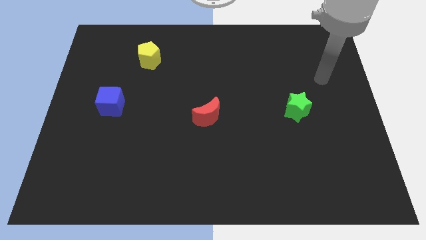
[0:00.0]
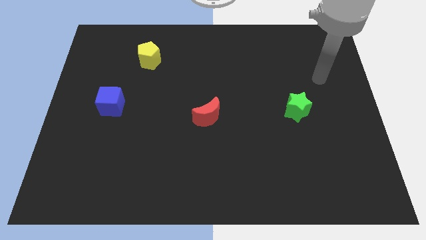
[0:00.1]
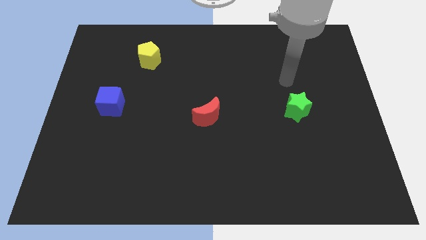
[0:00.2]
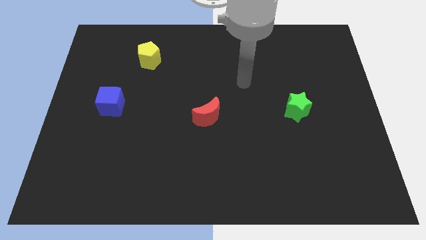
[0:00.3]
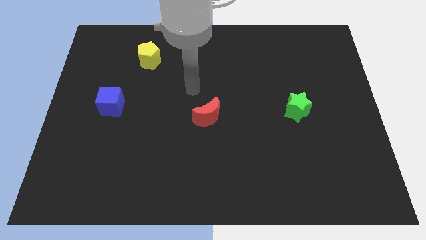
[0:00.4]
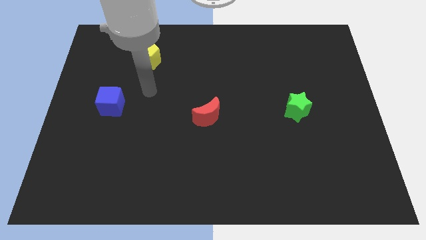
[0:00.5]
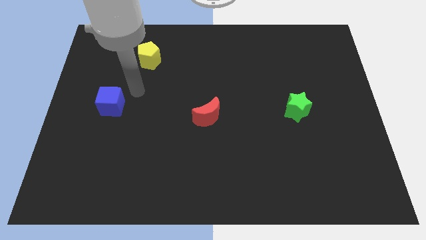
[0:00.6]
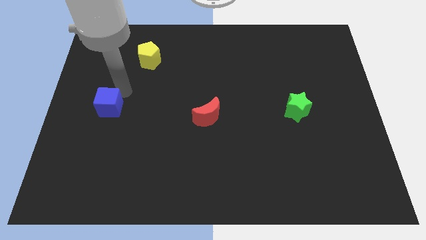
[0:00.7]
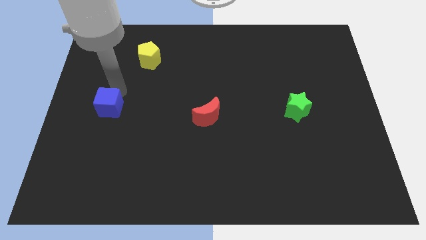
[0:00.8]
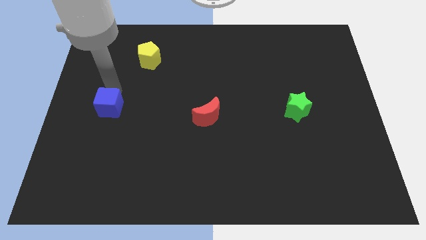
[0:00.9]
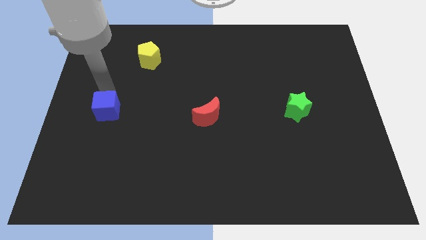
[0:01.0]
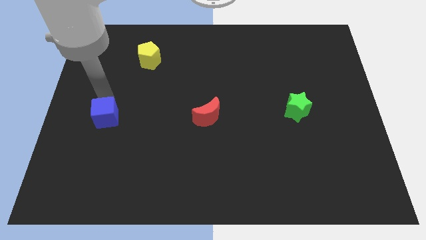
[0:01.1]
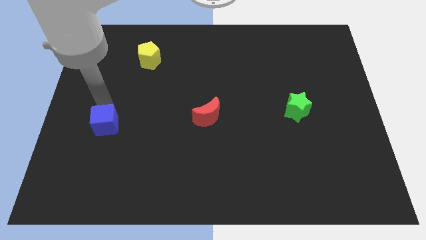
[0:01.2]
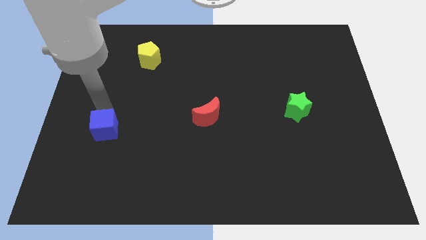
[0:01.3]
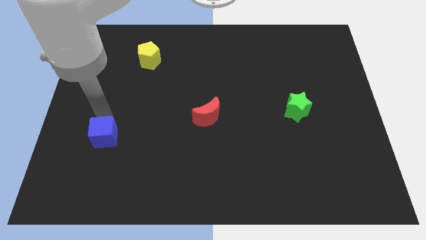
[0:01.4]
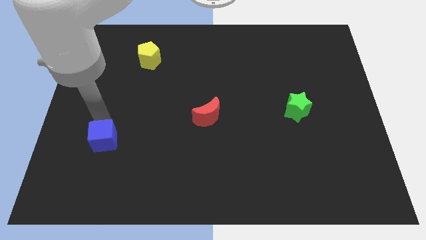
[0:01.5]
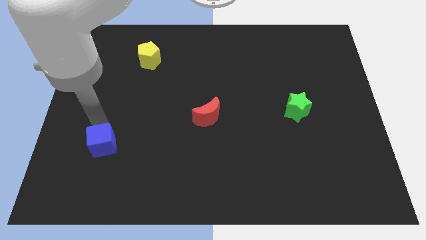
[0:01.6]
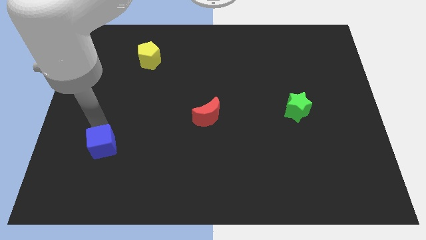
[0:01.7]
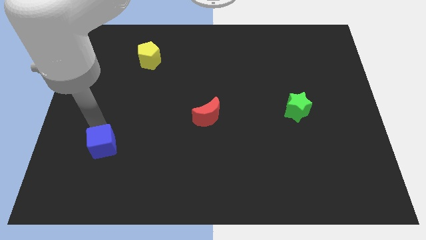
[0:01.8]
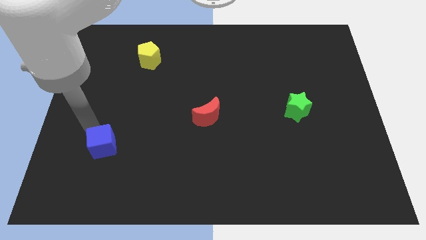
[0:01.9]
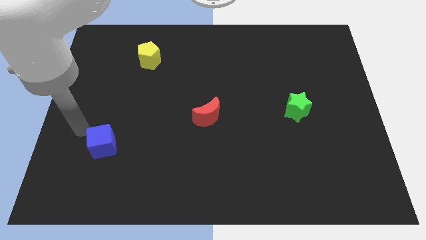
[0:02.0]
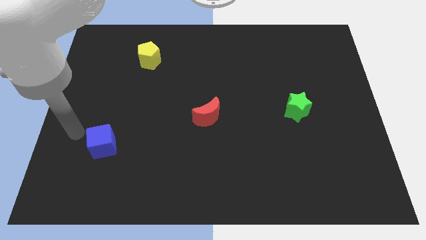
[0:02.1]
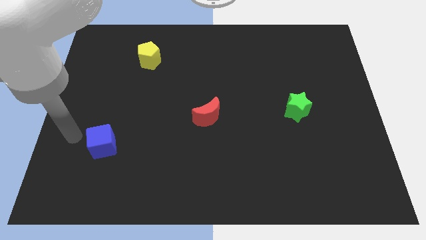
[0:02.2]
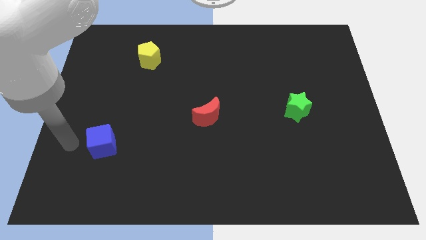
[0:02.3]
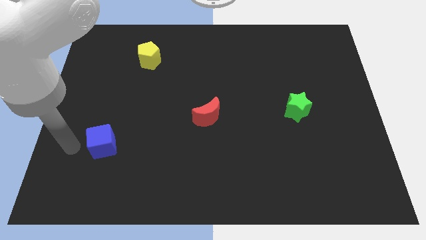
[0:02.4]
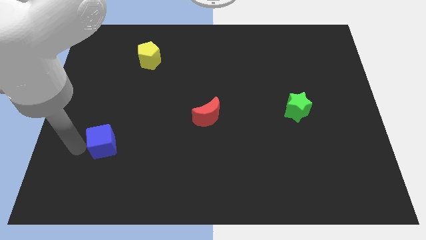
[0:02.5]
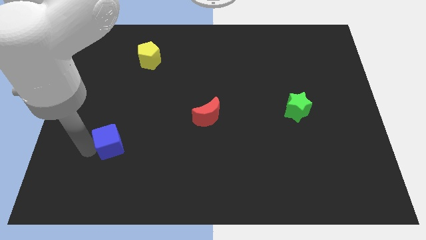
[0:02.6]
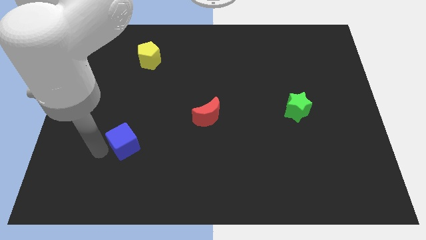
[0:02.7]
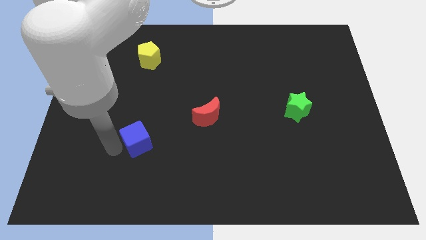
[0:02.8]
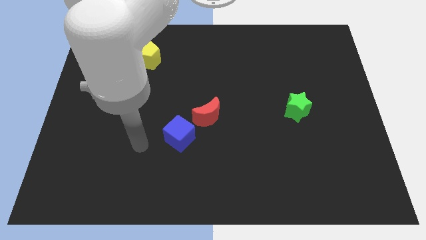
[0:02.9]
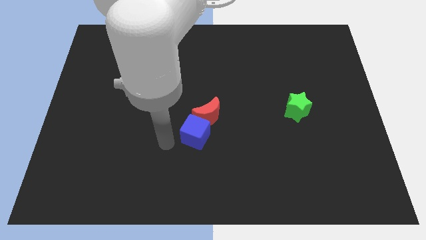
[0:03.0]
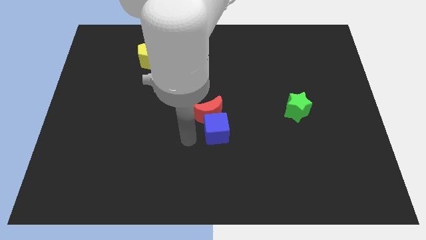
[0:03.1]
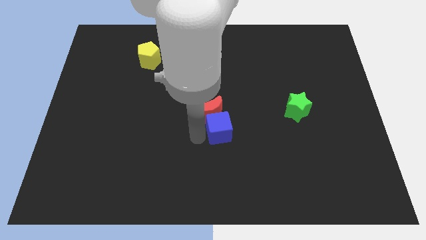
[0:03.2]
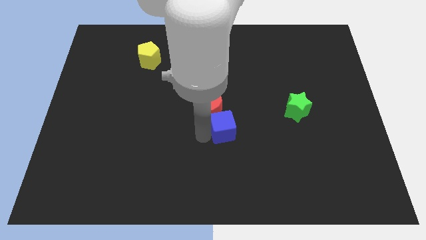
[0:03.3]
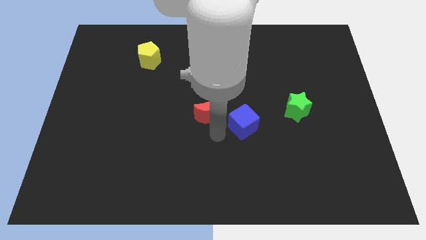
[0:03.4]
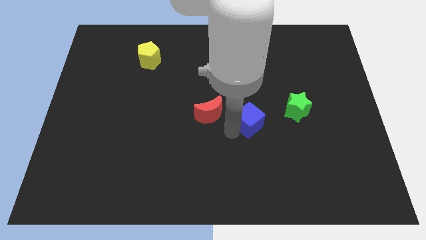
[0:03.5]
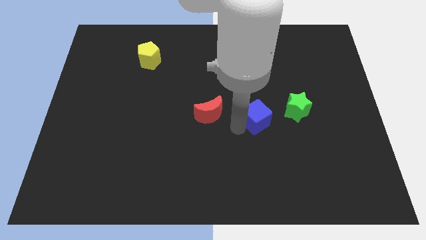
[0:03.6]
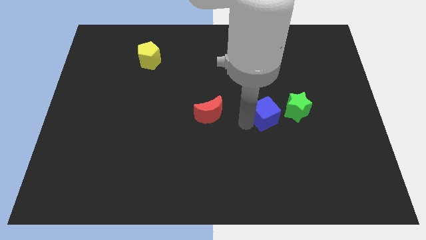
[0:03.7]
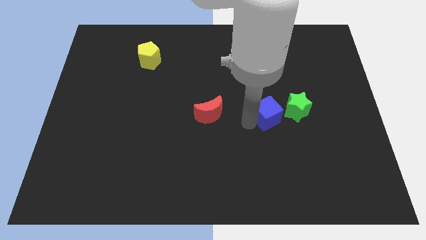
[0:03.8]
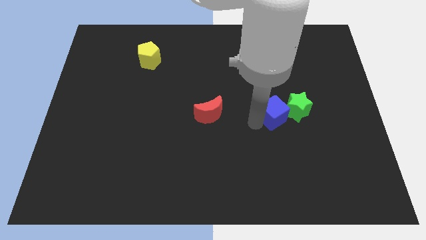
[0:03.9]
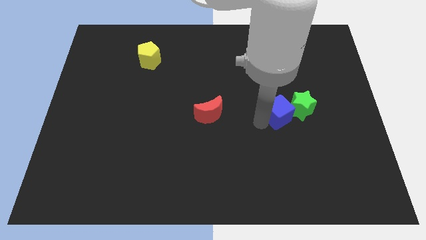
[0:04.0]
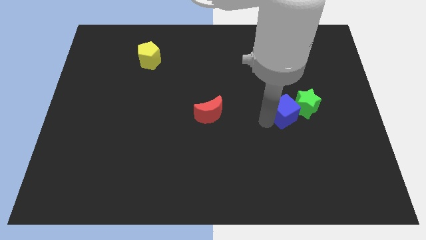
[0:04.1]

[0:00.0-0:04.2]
move the cube to the green star

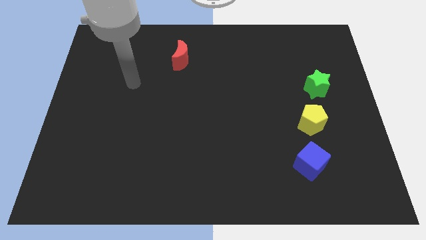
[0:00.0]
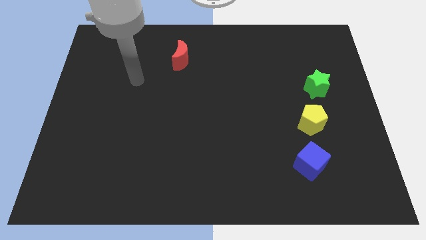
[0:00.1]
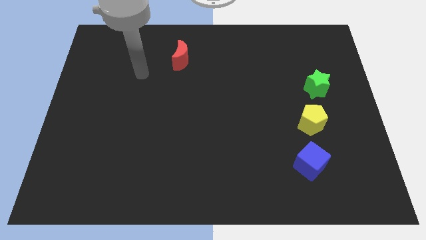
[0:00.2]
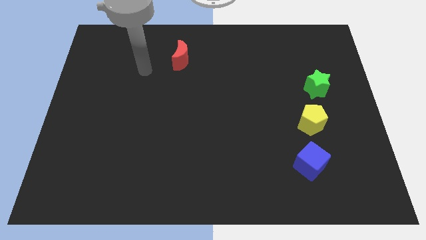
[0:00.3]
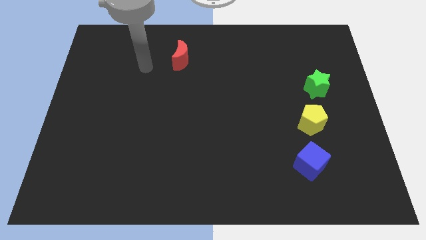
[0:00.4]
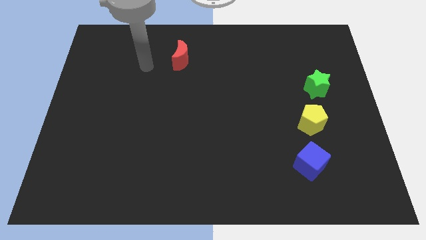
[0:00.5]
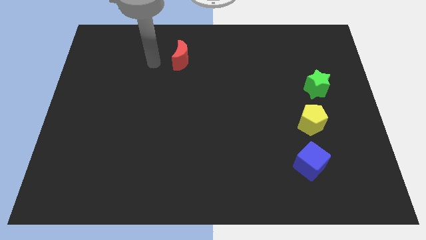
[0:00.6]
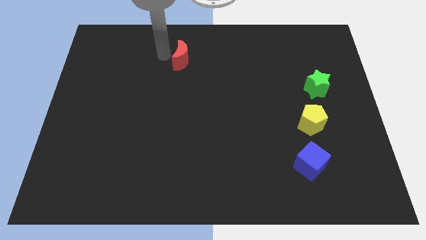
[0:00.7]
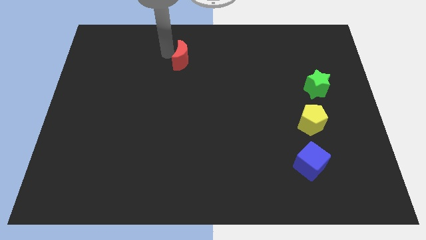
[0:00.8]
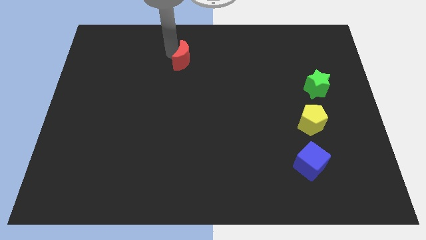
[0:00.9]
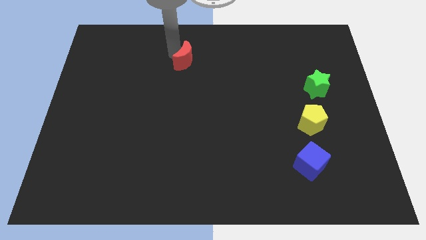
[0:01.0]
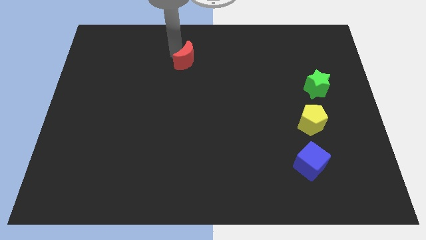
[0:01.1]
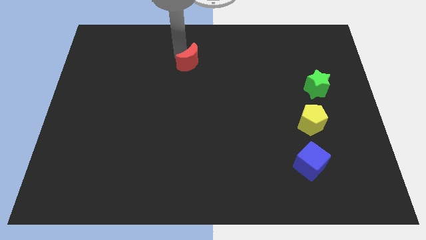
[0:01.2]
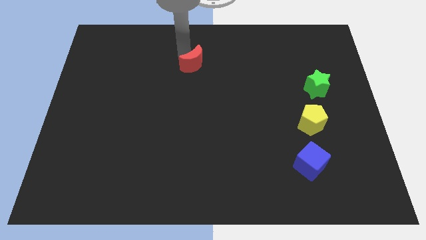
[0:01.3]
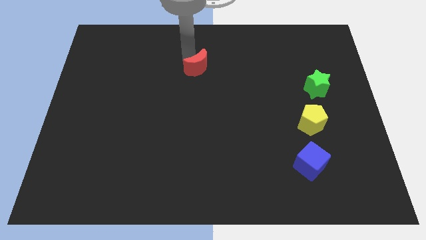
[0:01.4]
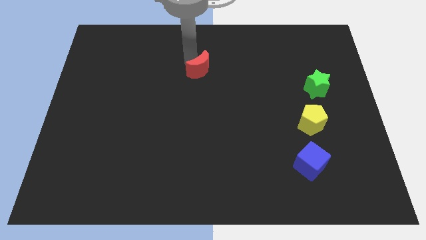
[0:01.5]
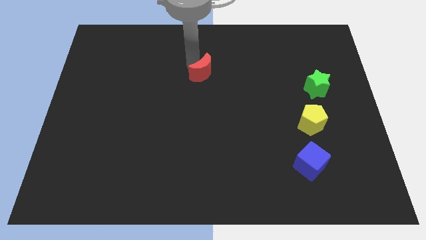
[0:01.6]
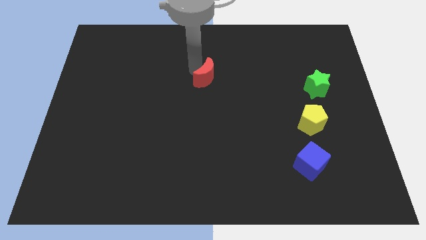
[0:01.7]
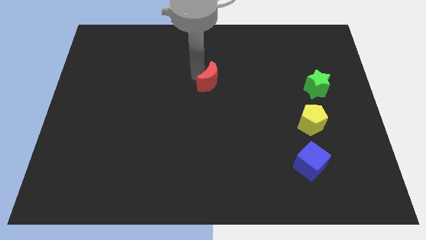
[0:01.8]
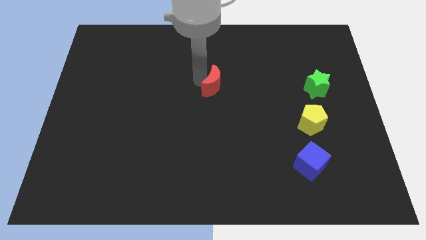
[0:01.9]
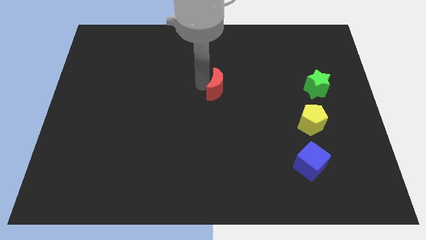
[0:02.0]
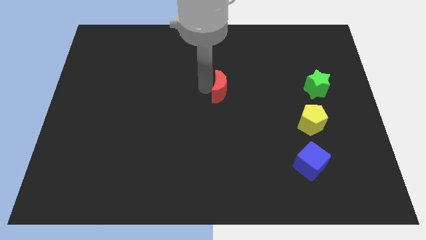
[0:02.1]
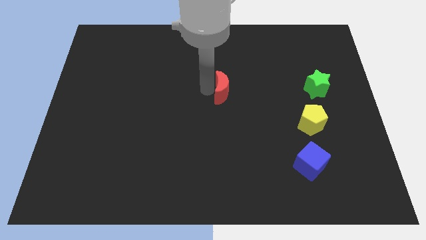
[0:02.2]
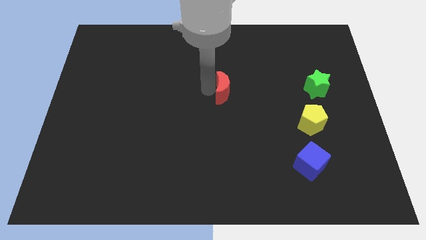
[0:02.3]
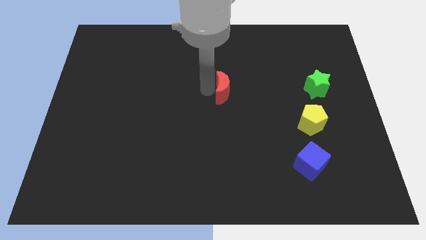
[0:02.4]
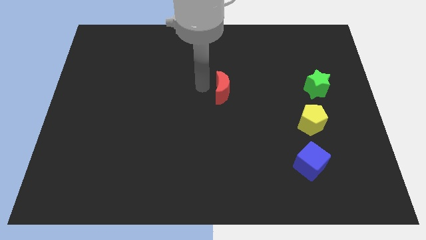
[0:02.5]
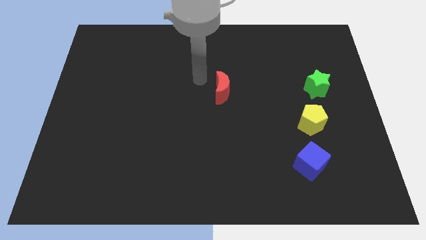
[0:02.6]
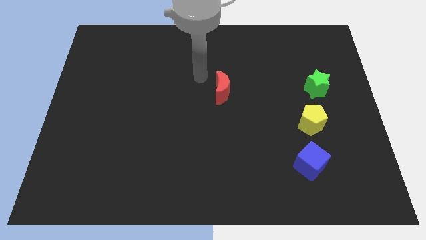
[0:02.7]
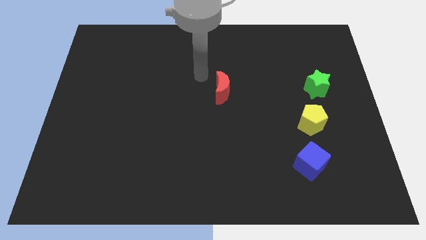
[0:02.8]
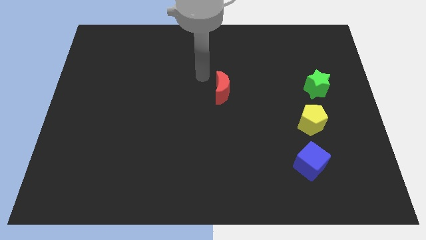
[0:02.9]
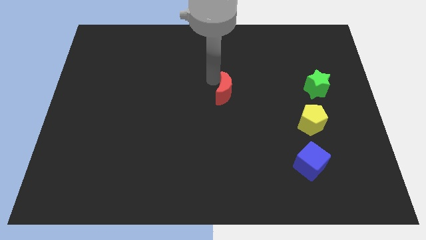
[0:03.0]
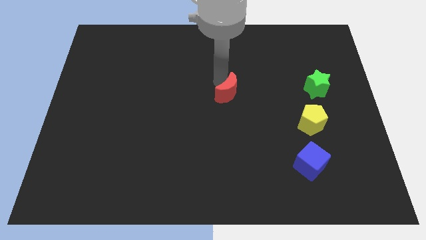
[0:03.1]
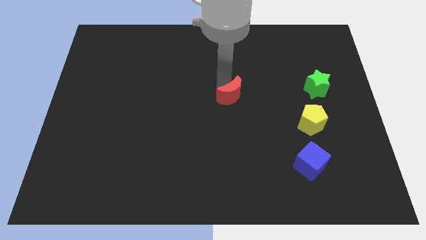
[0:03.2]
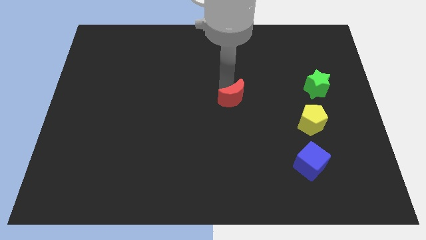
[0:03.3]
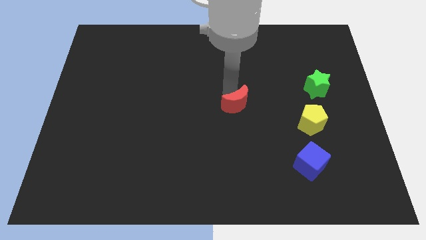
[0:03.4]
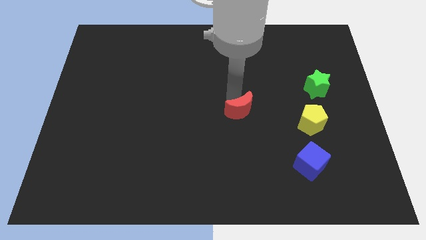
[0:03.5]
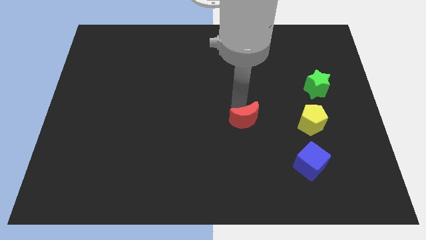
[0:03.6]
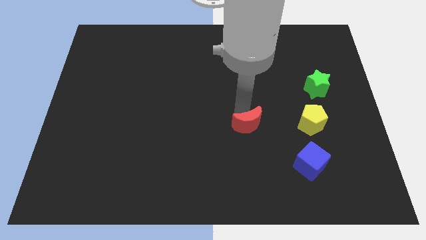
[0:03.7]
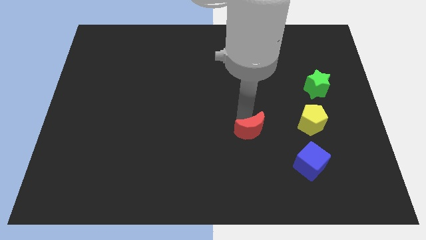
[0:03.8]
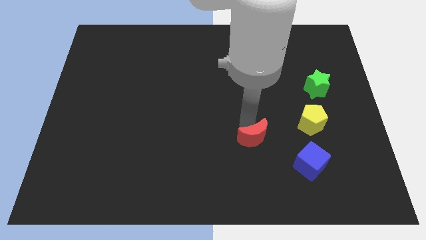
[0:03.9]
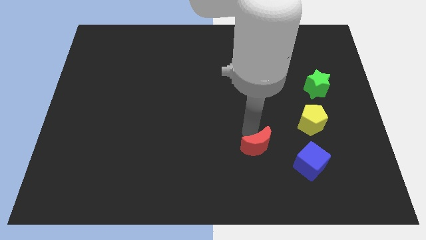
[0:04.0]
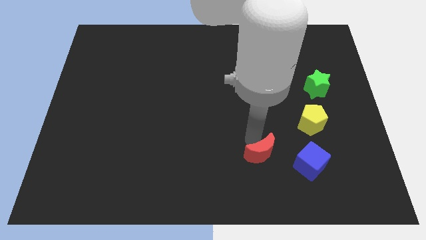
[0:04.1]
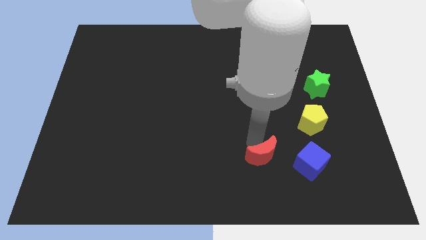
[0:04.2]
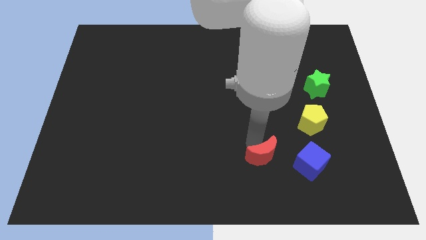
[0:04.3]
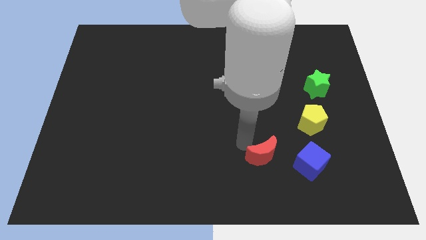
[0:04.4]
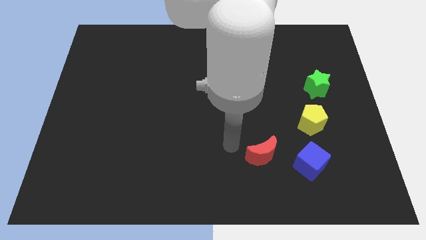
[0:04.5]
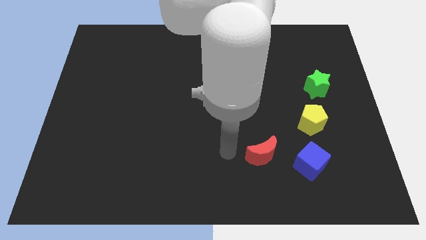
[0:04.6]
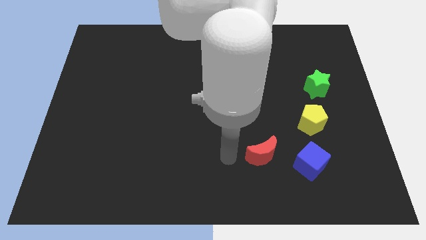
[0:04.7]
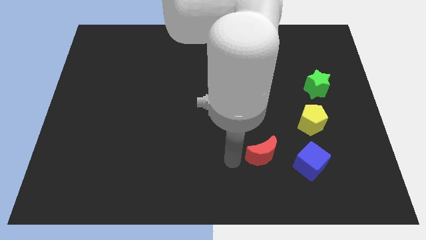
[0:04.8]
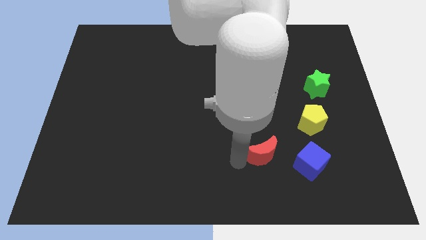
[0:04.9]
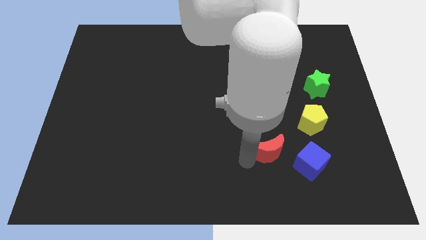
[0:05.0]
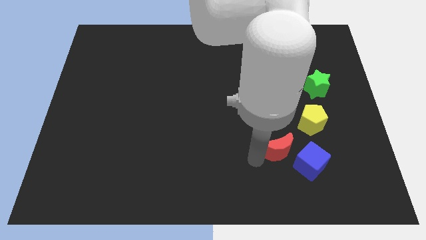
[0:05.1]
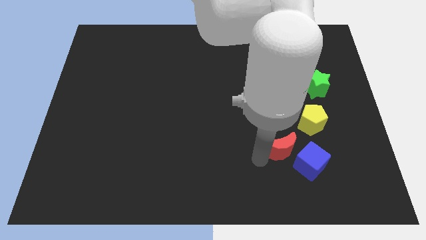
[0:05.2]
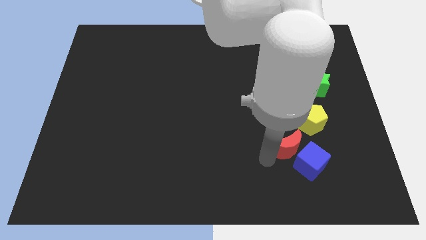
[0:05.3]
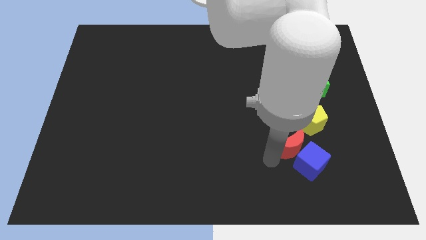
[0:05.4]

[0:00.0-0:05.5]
put the moon towards the blue cube
